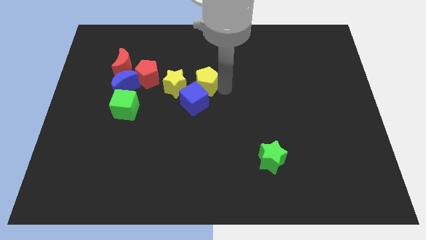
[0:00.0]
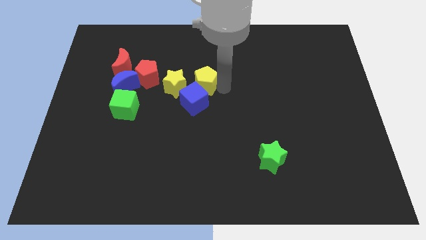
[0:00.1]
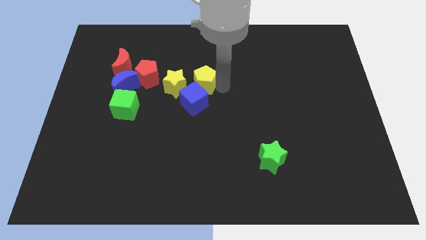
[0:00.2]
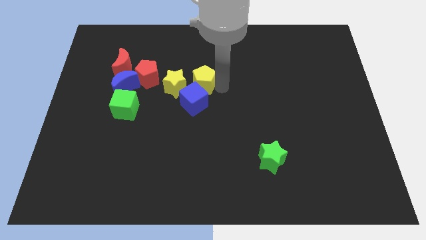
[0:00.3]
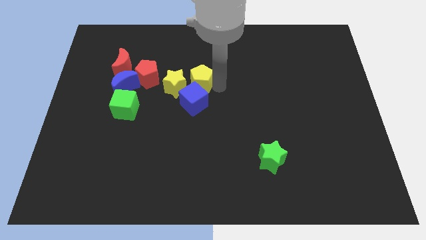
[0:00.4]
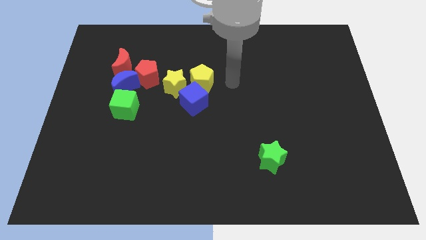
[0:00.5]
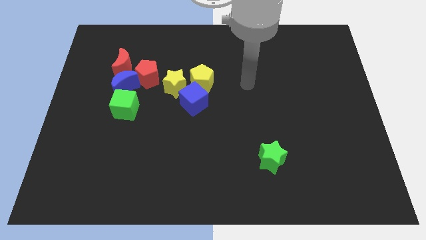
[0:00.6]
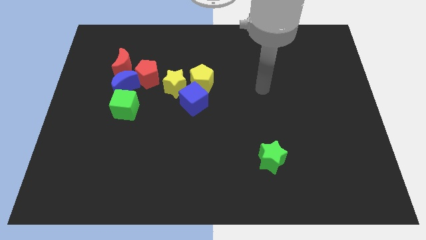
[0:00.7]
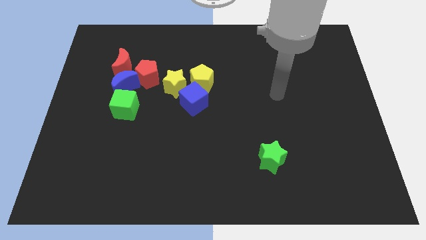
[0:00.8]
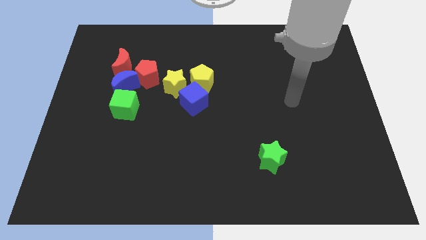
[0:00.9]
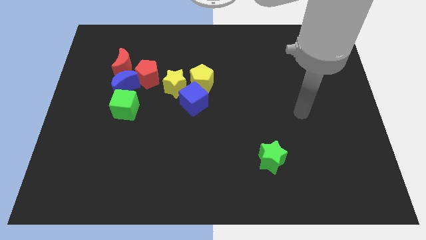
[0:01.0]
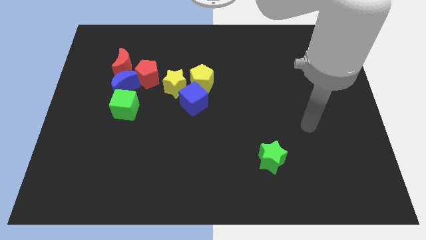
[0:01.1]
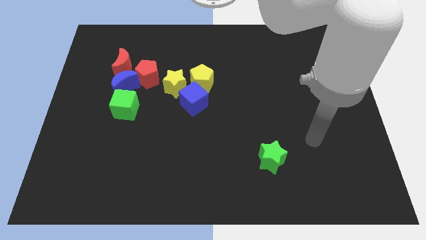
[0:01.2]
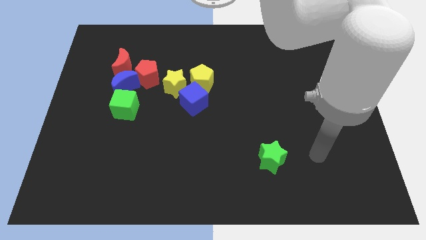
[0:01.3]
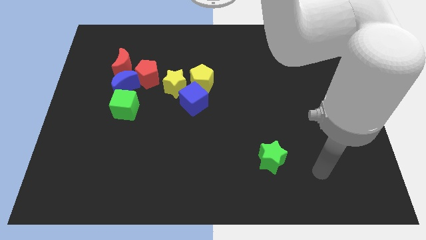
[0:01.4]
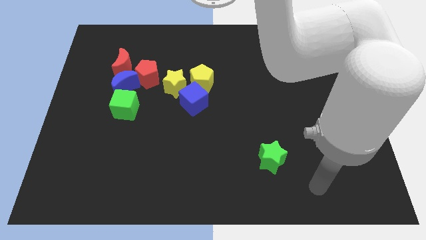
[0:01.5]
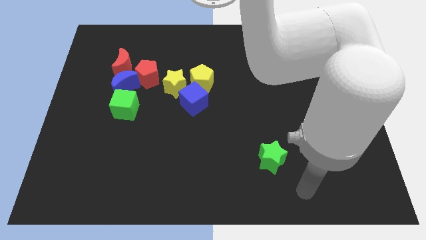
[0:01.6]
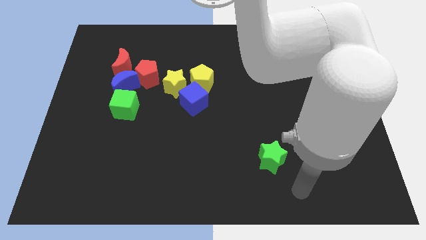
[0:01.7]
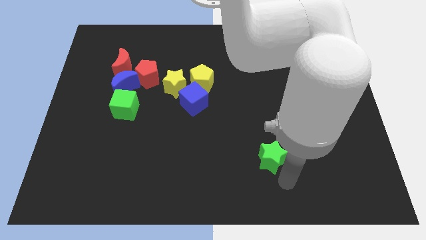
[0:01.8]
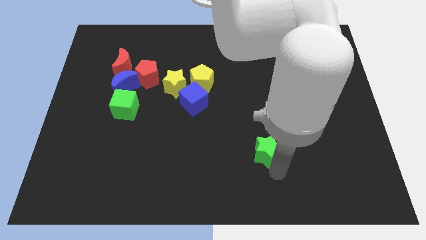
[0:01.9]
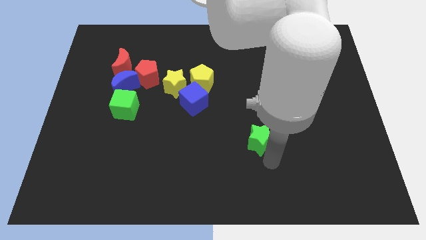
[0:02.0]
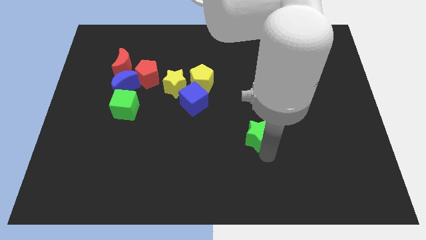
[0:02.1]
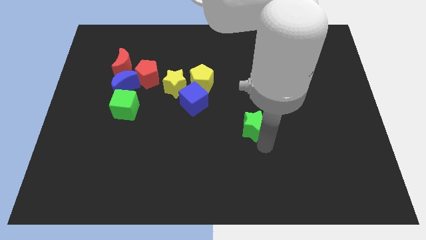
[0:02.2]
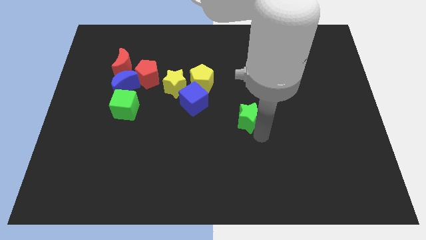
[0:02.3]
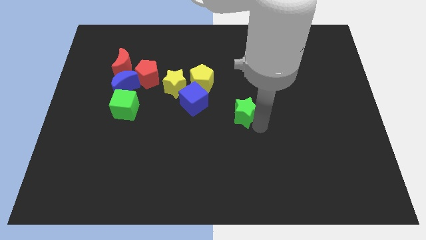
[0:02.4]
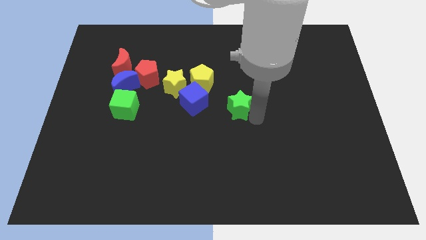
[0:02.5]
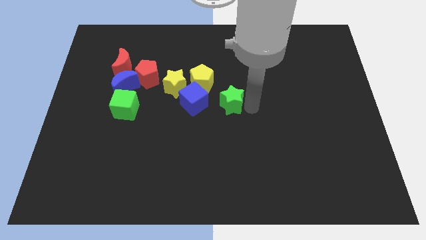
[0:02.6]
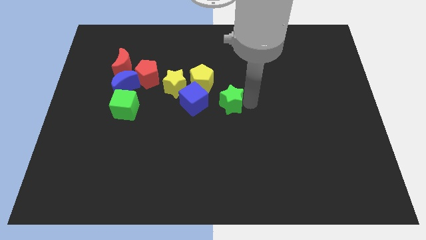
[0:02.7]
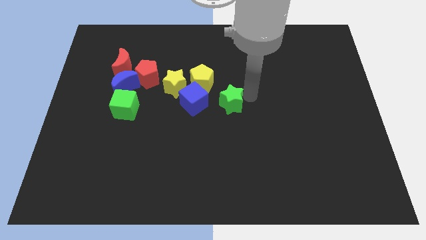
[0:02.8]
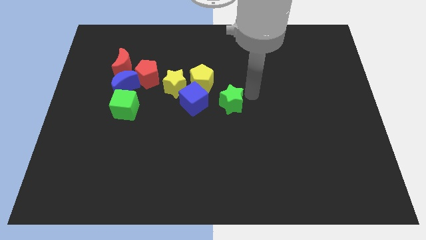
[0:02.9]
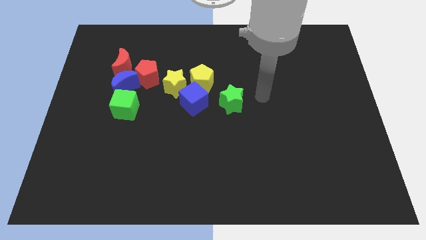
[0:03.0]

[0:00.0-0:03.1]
move your arm away from the yellow pentagon

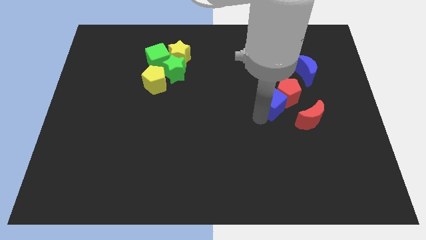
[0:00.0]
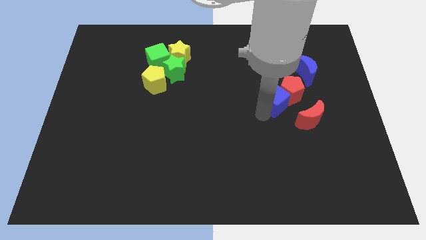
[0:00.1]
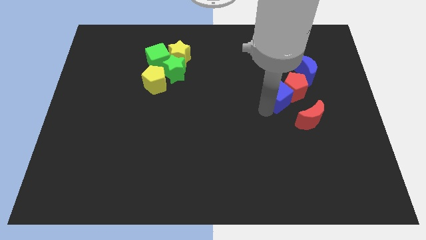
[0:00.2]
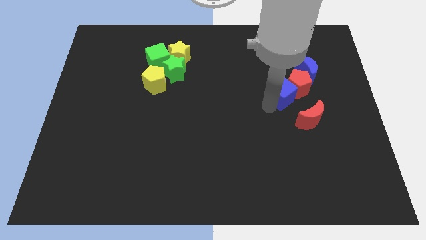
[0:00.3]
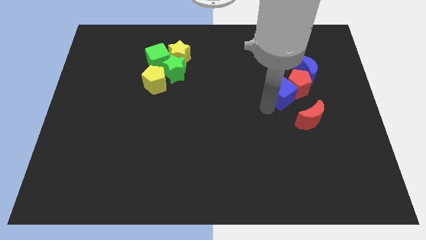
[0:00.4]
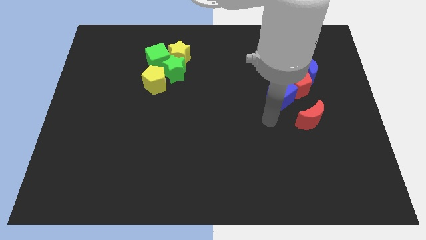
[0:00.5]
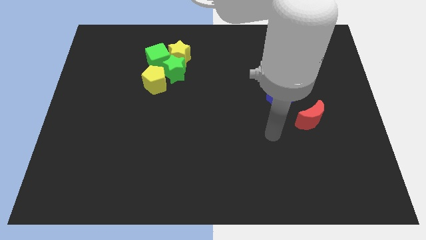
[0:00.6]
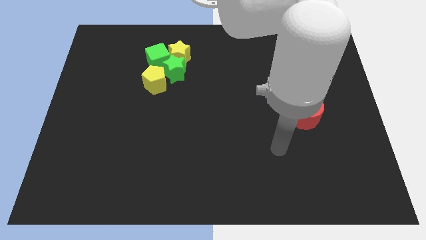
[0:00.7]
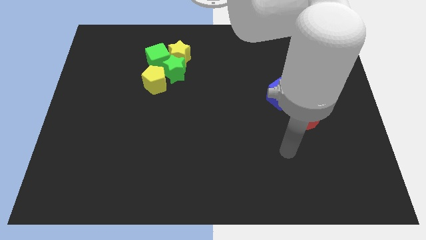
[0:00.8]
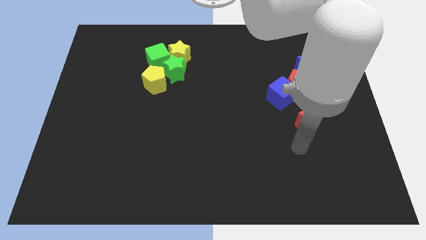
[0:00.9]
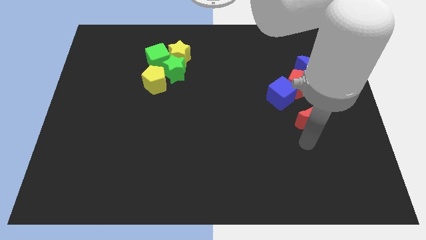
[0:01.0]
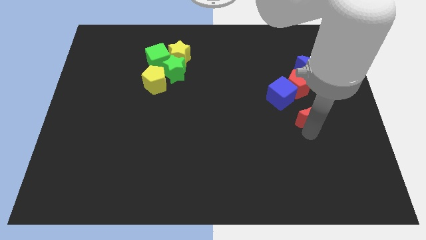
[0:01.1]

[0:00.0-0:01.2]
push the blue cube along with the red pentagon into the blue crescent

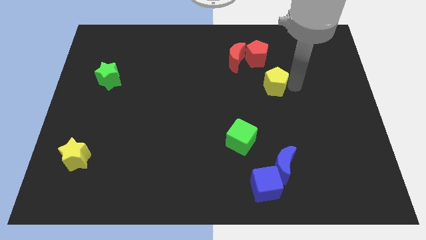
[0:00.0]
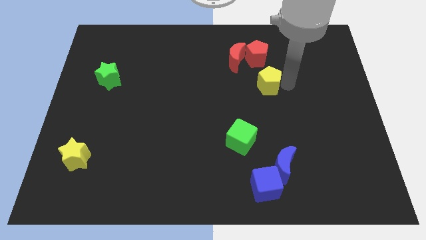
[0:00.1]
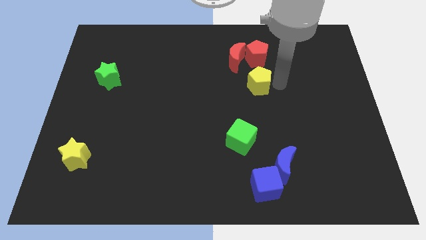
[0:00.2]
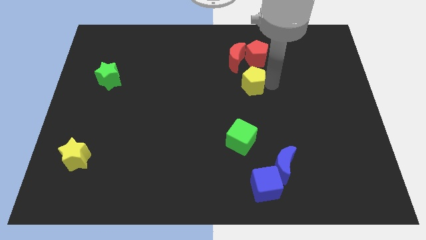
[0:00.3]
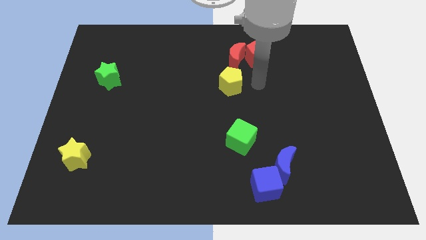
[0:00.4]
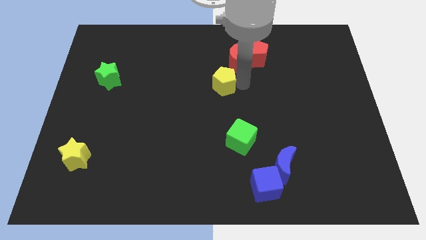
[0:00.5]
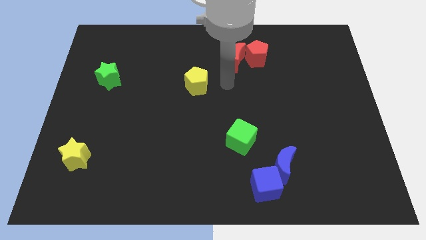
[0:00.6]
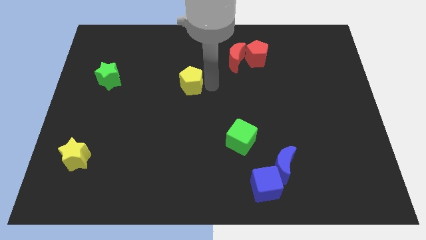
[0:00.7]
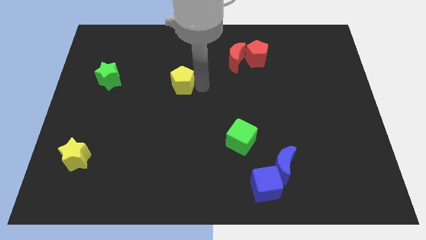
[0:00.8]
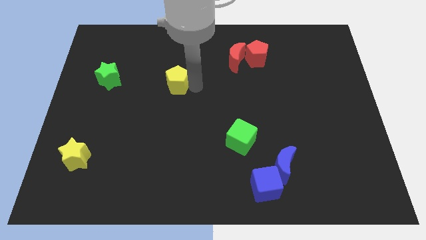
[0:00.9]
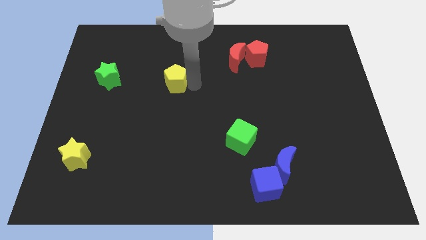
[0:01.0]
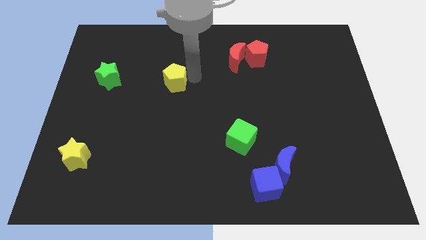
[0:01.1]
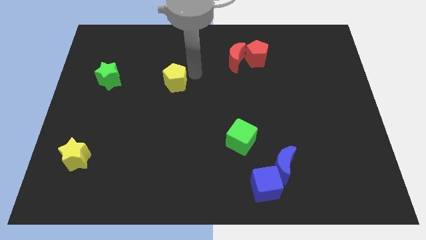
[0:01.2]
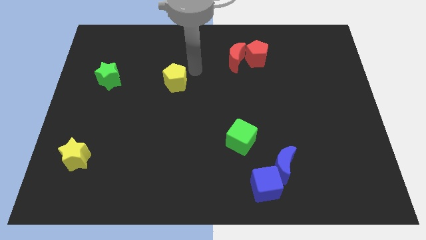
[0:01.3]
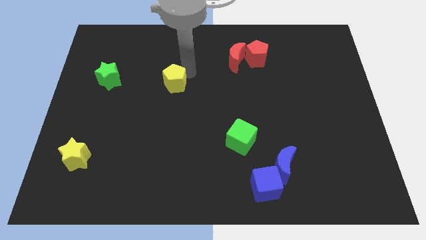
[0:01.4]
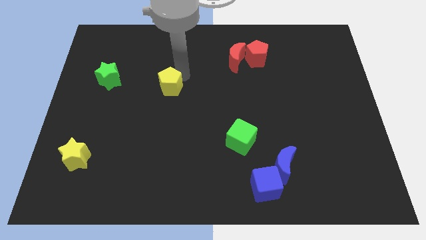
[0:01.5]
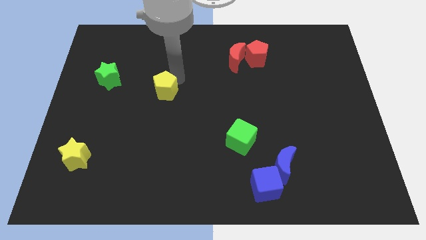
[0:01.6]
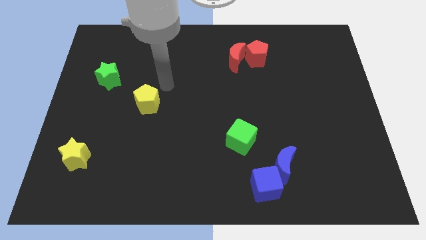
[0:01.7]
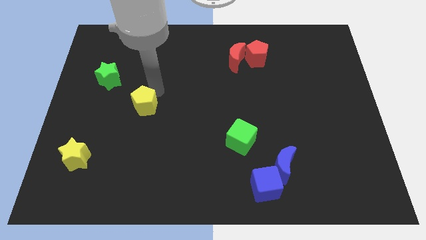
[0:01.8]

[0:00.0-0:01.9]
put the yellow pentagon between the green star and green cube

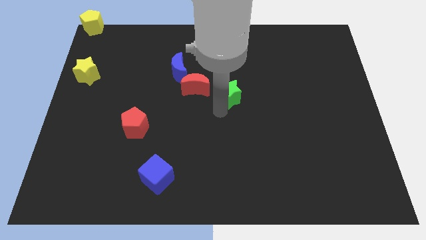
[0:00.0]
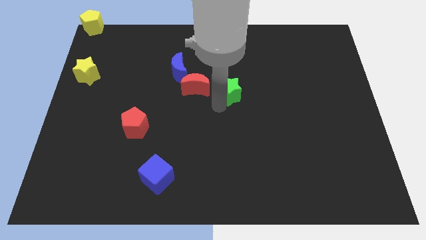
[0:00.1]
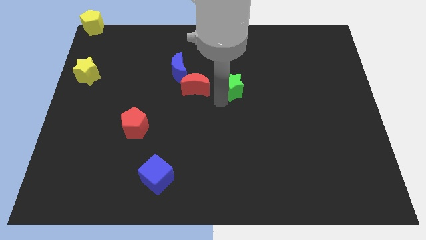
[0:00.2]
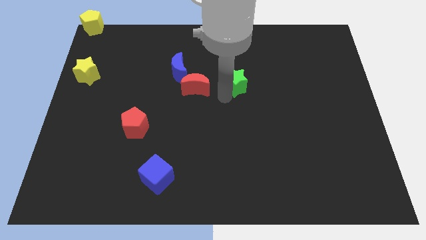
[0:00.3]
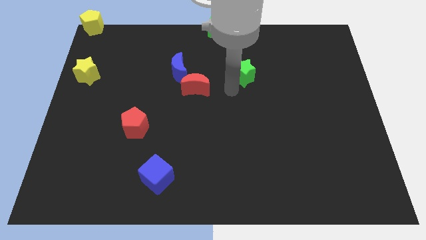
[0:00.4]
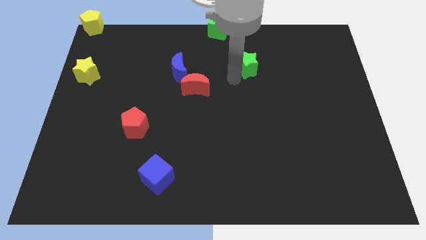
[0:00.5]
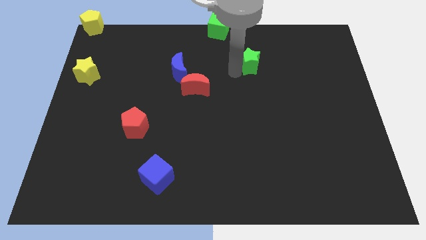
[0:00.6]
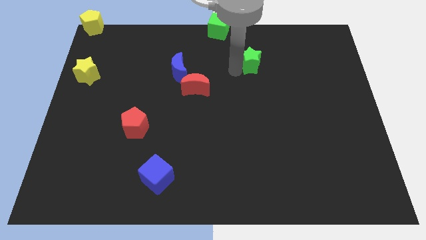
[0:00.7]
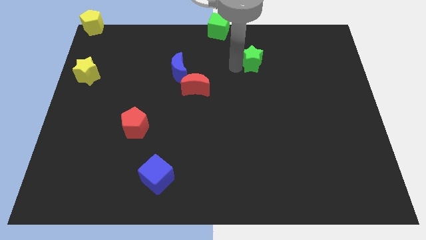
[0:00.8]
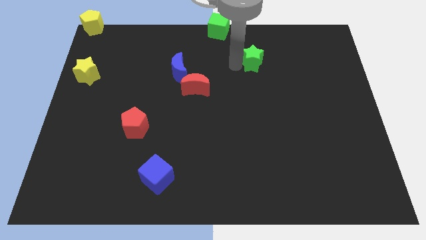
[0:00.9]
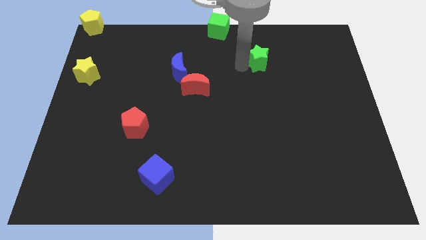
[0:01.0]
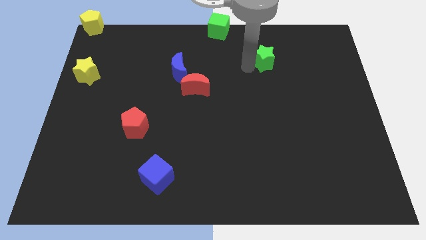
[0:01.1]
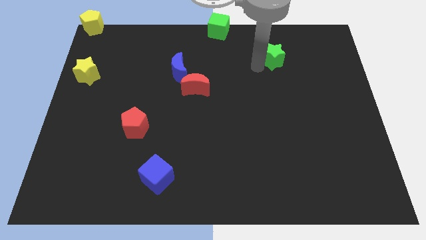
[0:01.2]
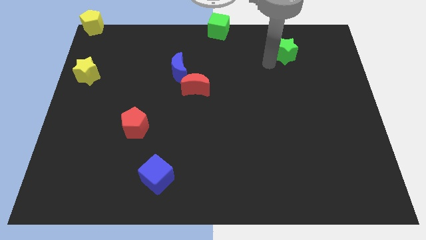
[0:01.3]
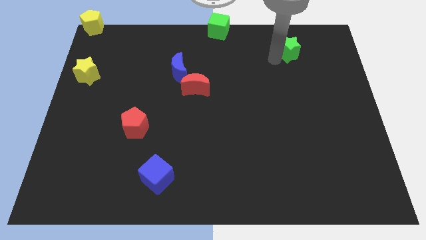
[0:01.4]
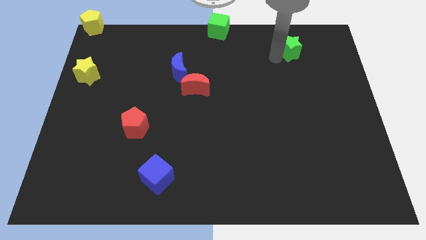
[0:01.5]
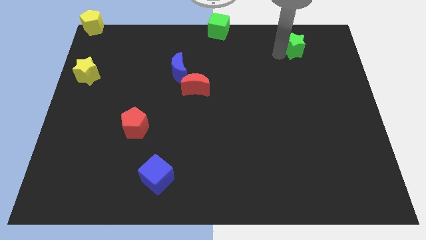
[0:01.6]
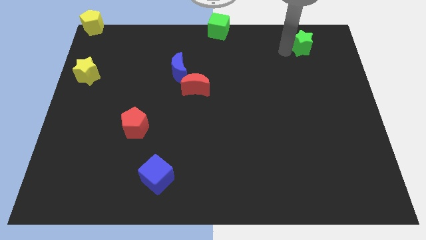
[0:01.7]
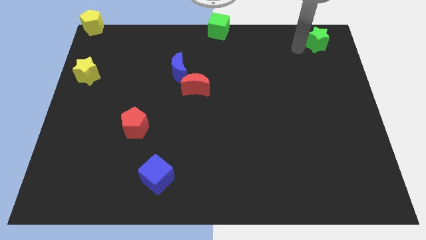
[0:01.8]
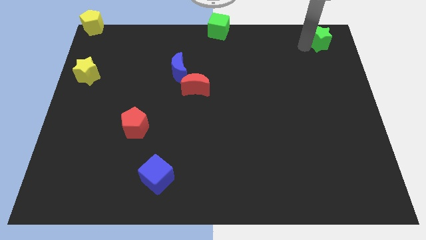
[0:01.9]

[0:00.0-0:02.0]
slide the green star towards the top right corner

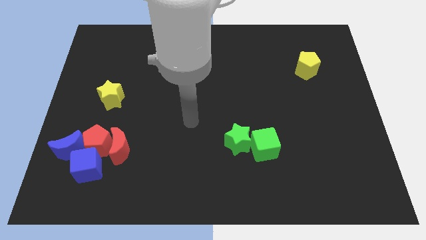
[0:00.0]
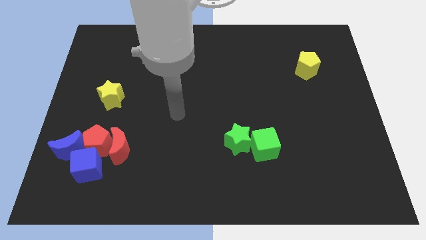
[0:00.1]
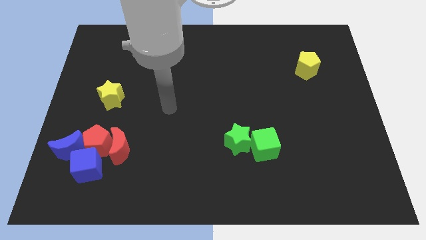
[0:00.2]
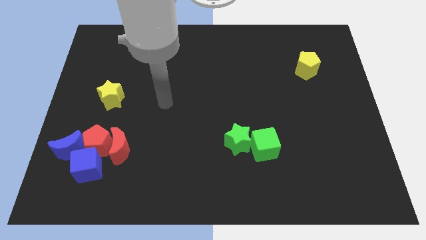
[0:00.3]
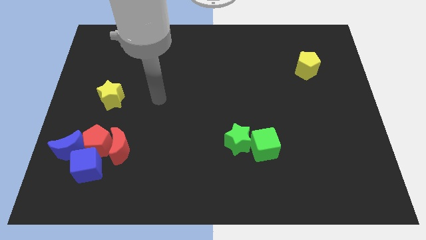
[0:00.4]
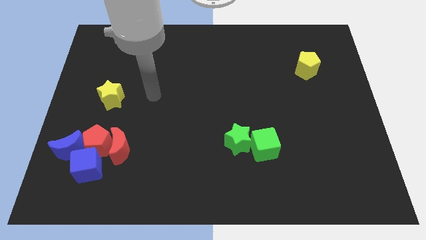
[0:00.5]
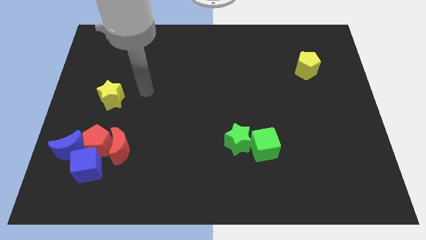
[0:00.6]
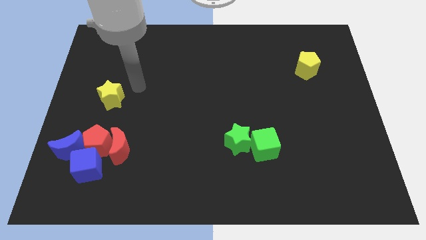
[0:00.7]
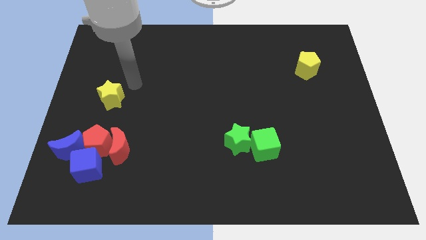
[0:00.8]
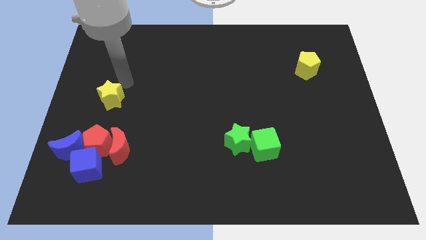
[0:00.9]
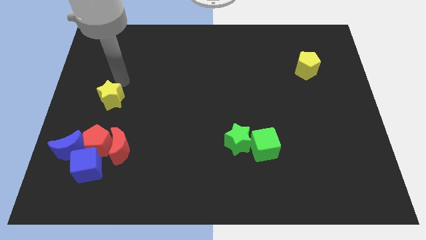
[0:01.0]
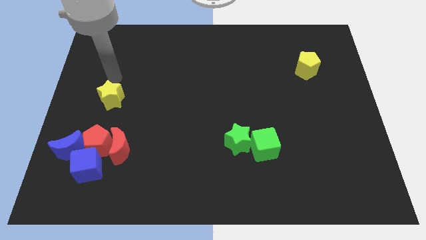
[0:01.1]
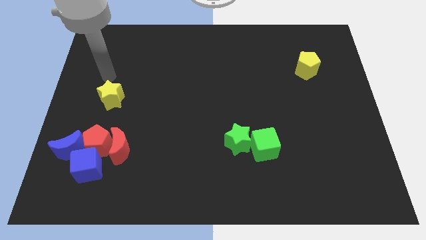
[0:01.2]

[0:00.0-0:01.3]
move your arm to the top of the yellow star
